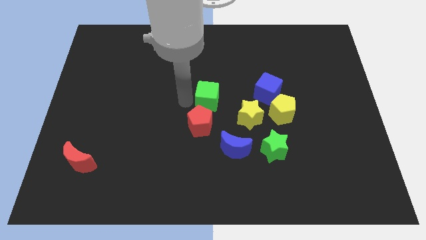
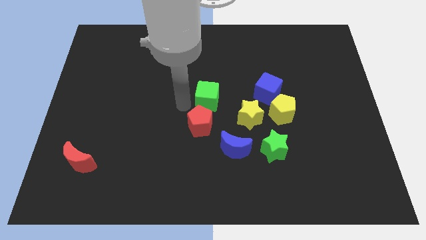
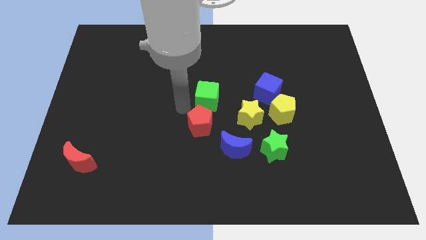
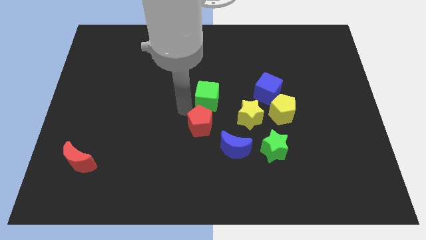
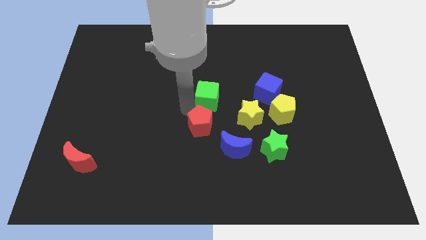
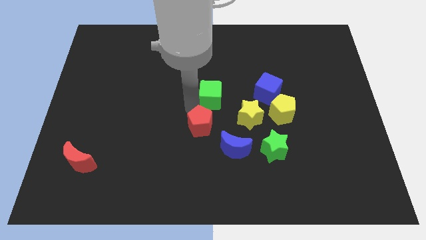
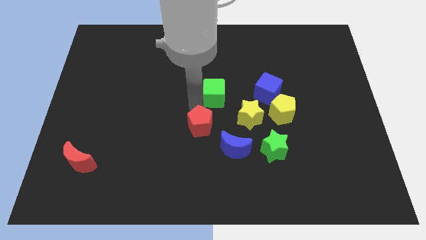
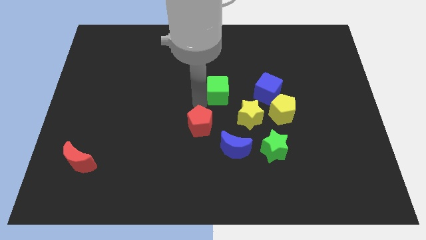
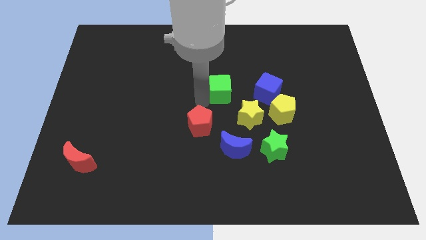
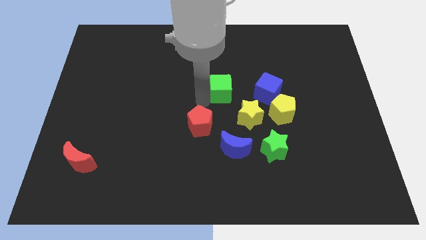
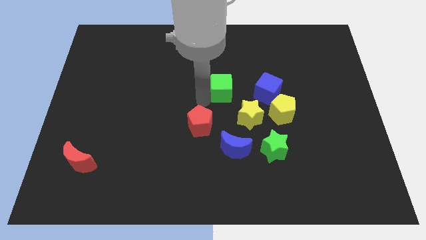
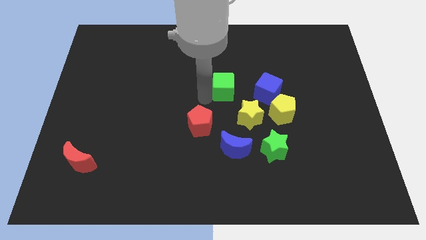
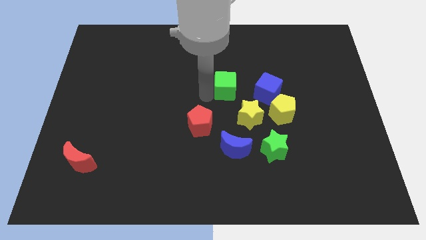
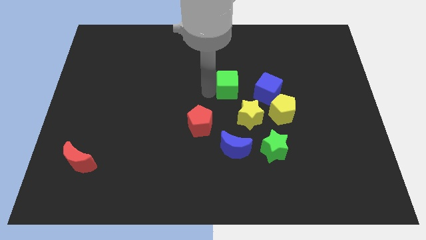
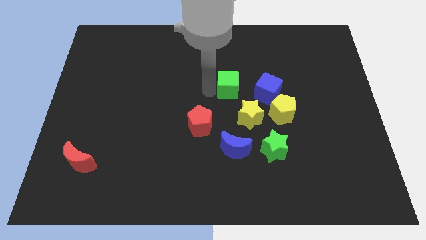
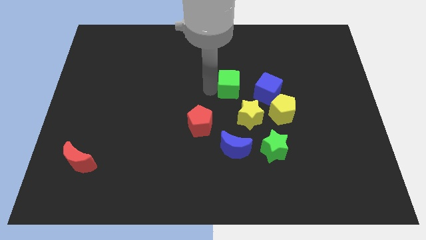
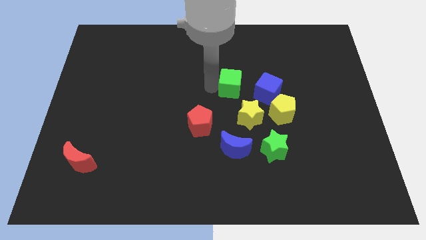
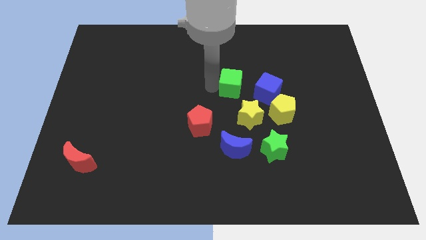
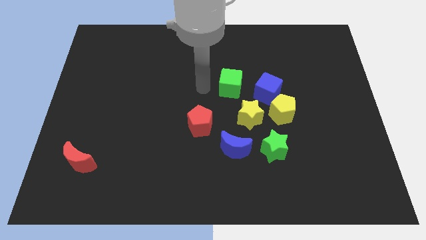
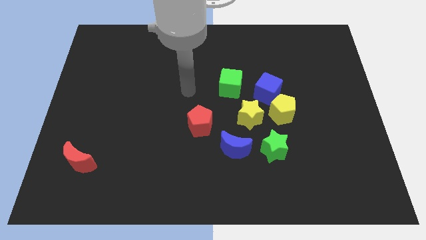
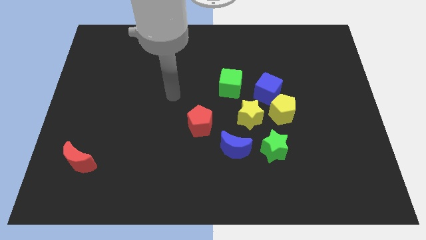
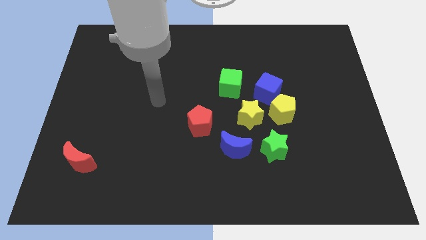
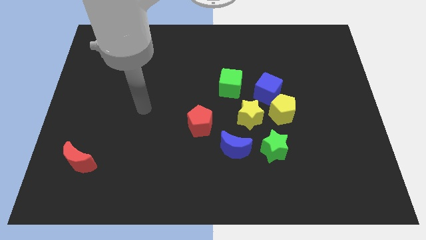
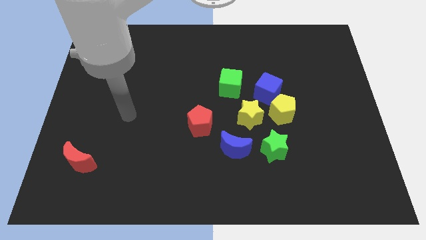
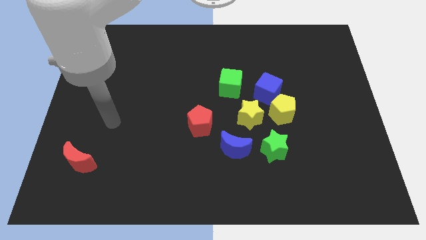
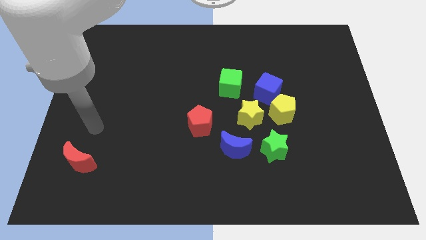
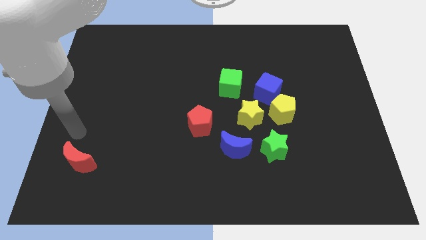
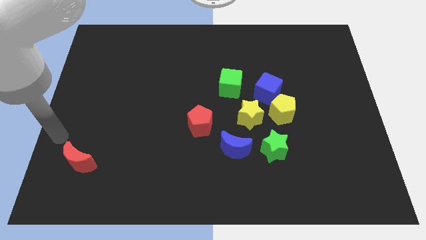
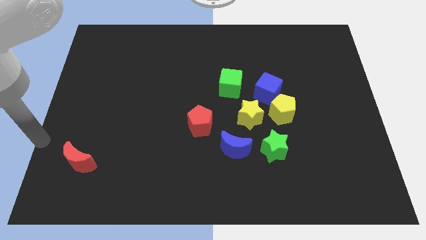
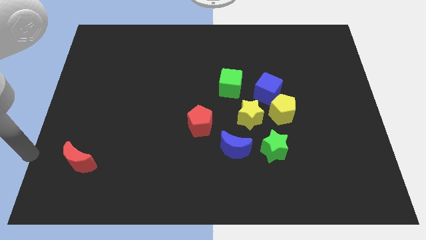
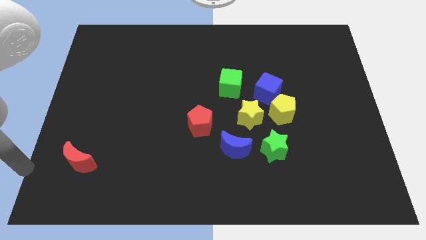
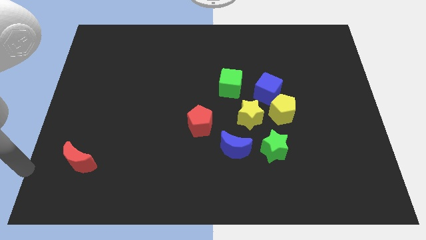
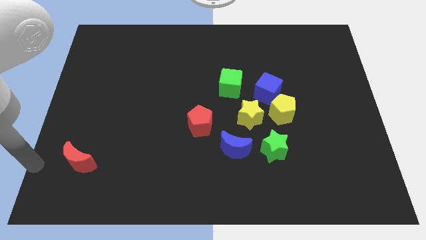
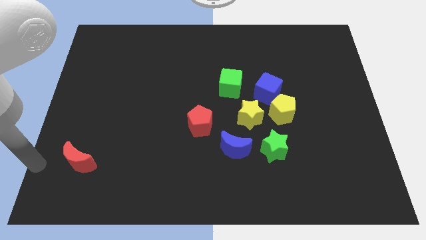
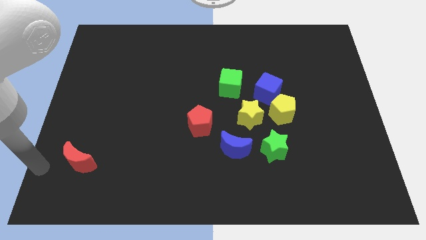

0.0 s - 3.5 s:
push green cube beside blue cube

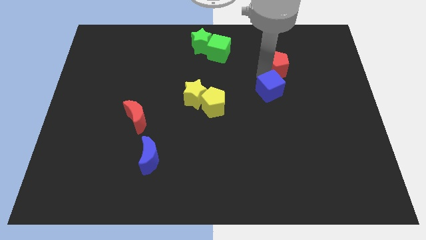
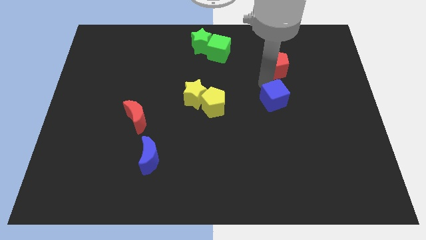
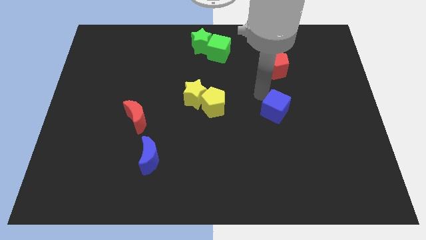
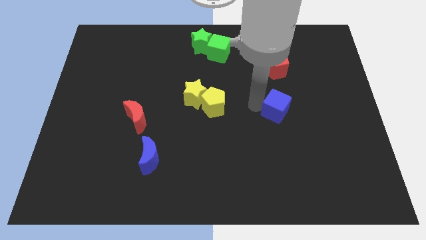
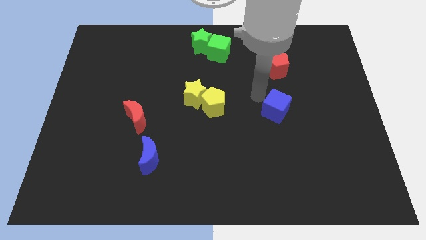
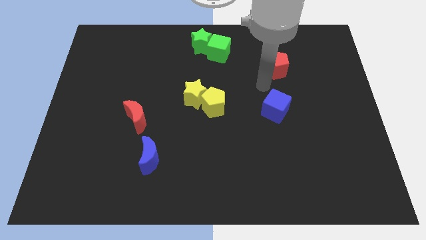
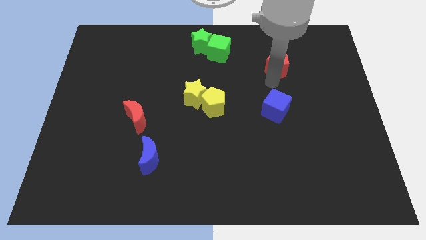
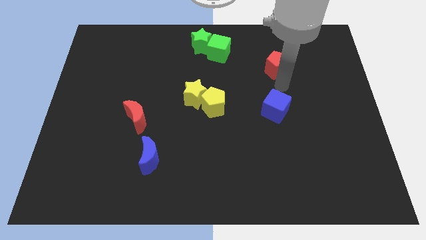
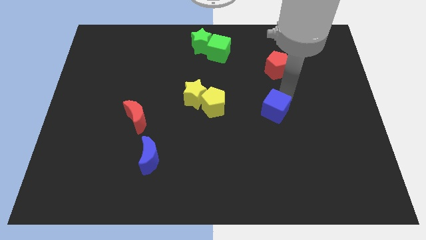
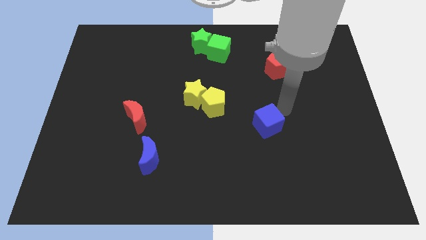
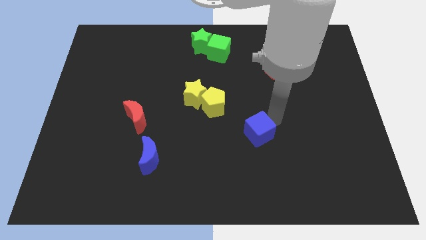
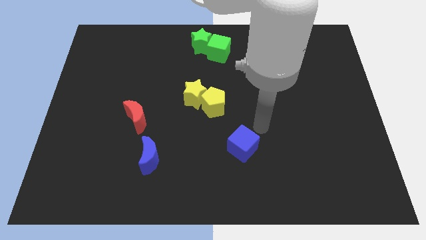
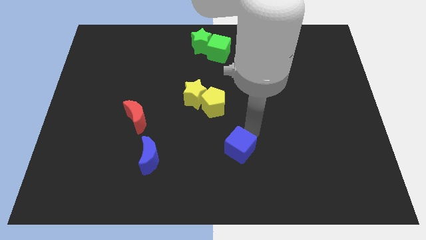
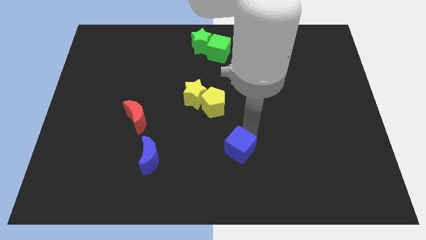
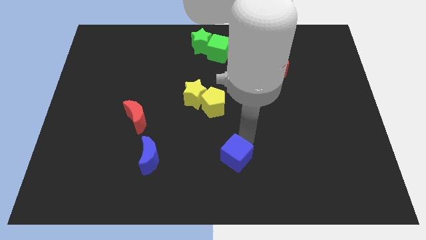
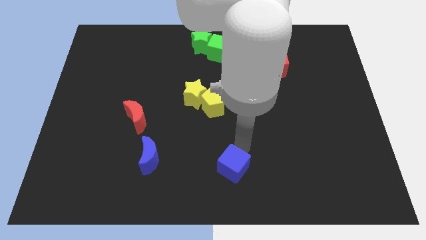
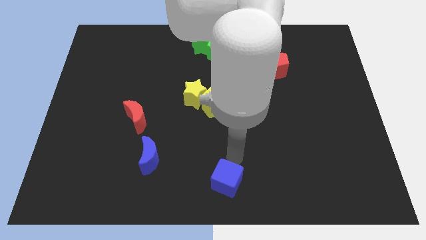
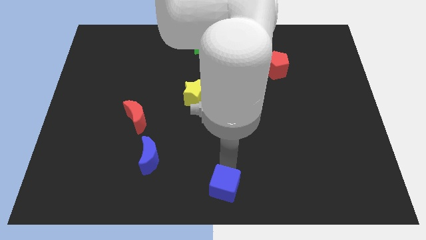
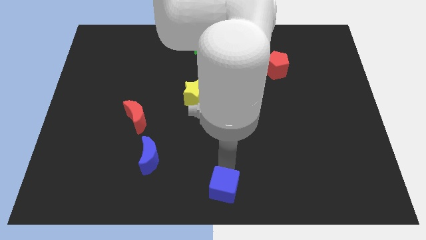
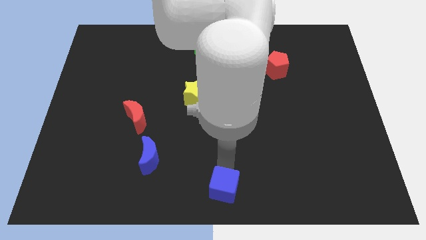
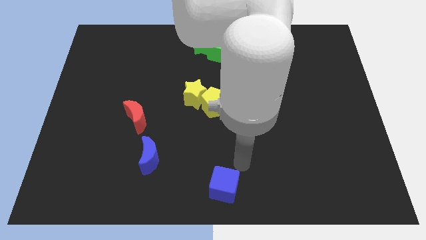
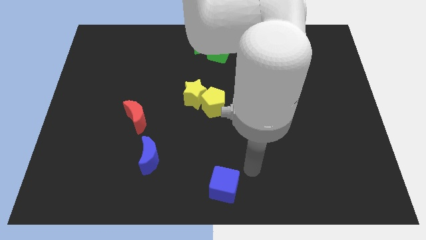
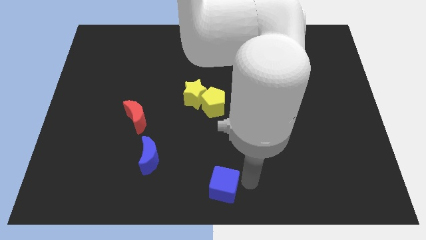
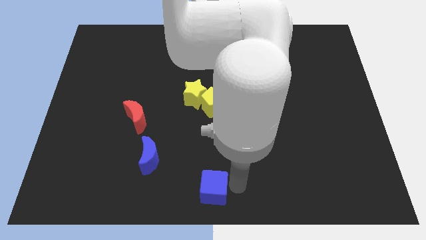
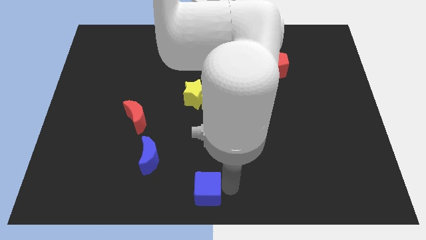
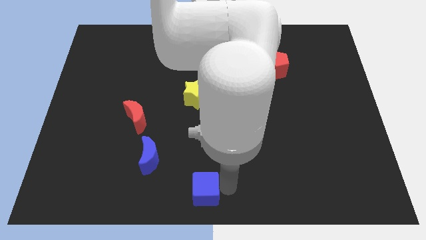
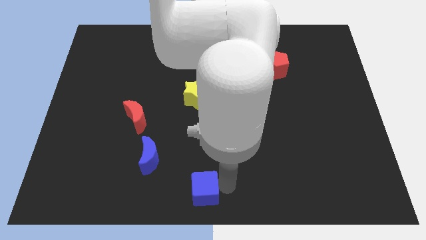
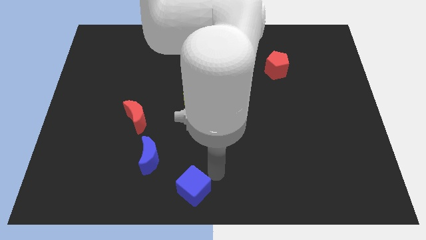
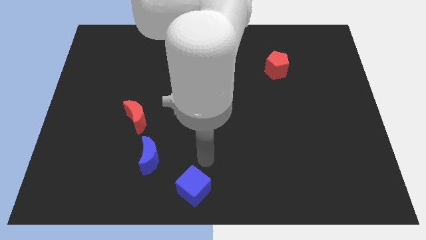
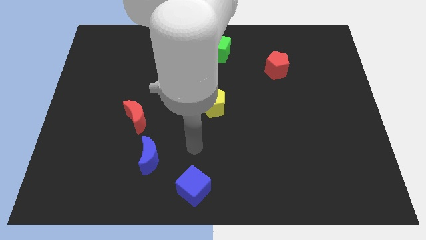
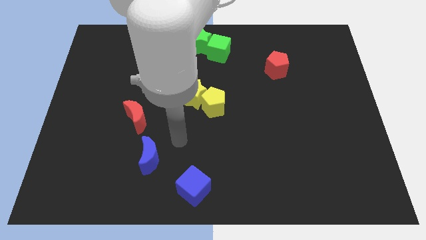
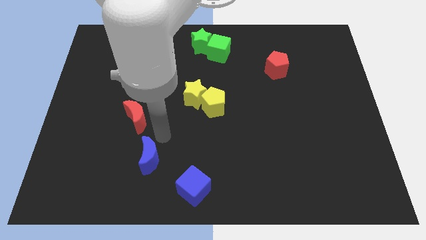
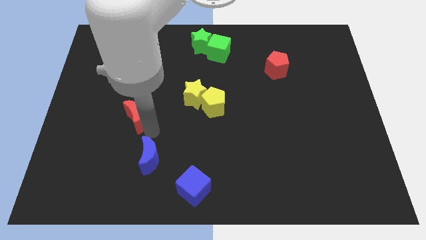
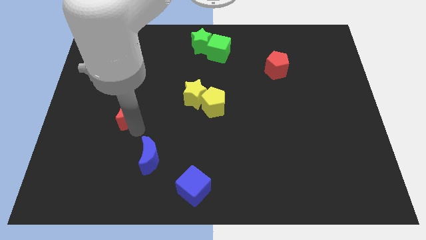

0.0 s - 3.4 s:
place the blue cube to the bottom center of the board

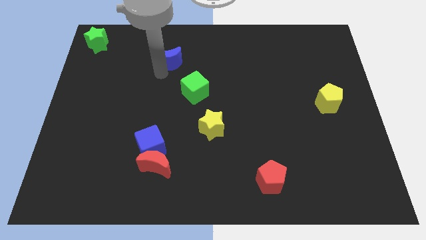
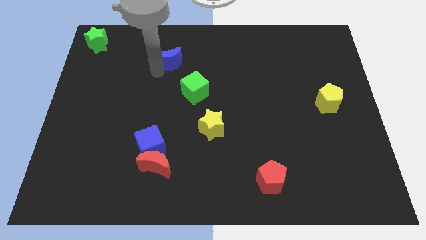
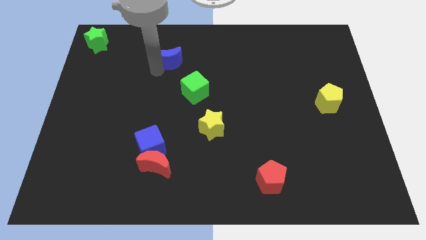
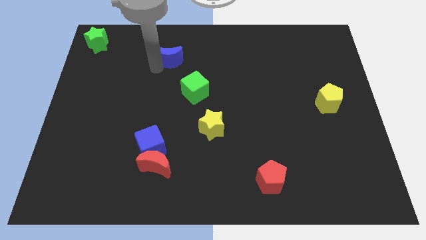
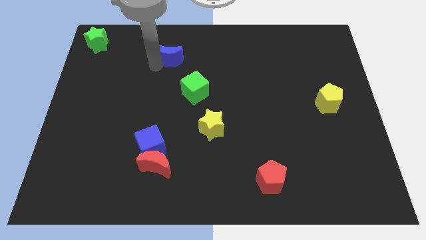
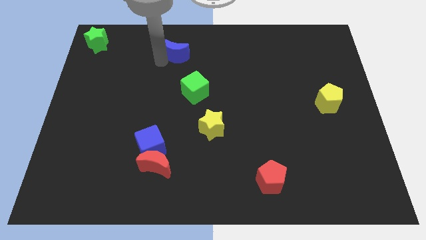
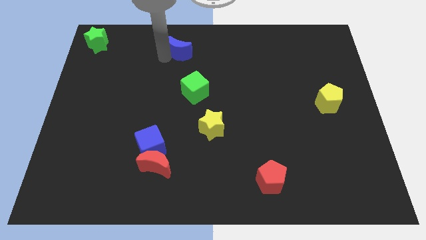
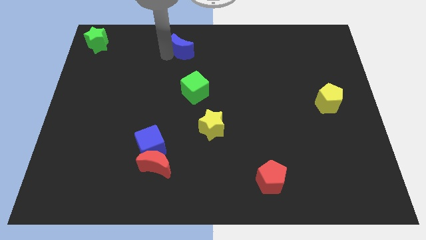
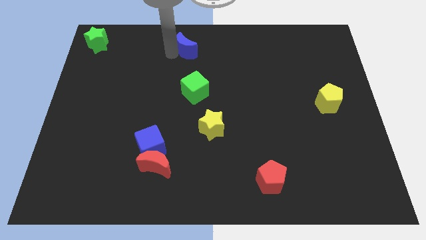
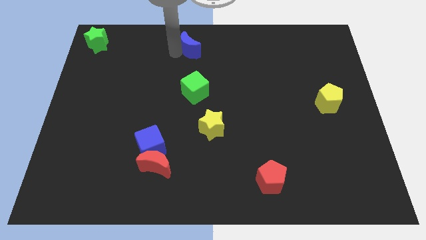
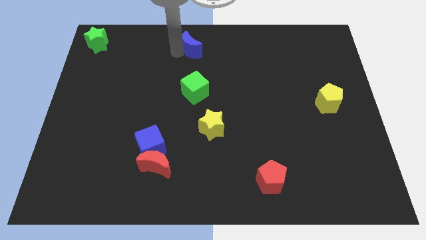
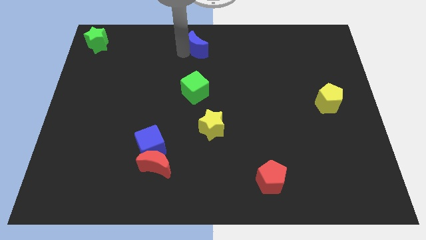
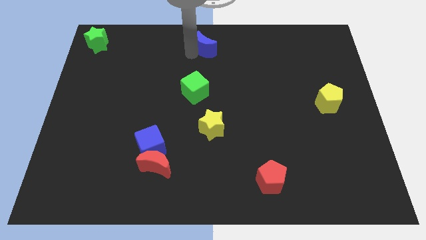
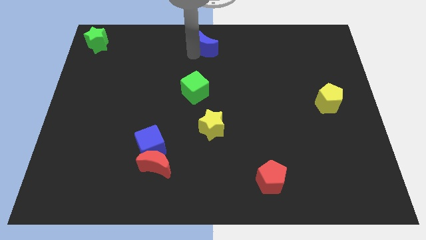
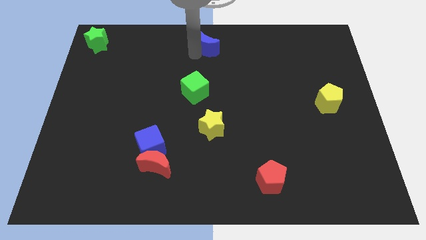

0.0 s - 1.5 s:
push the blue moon above the green cube

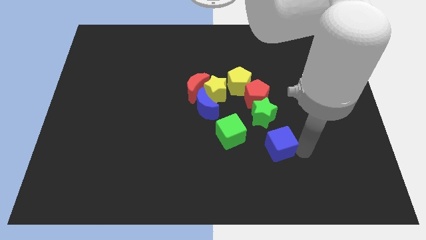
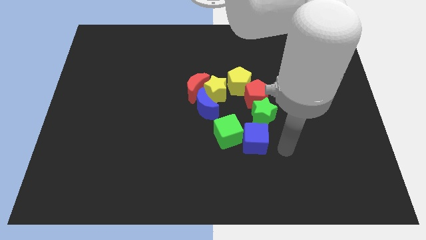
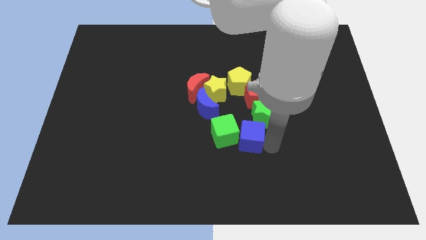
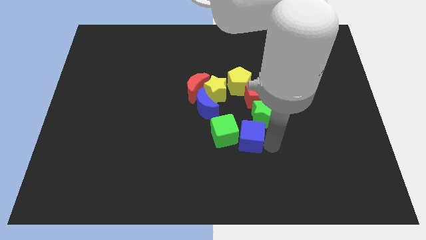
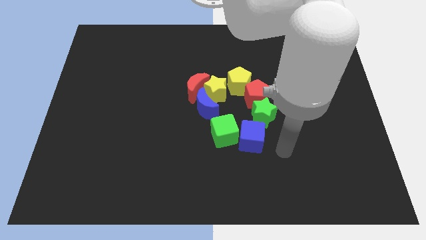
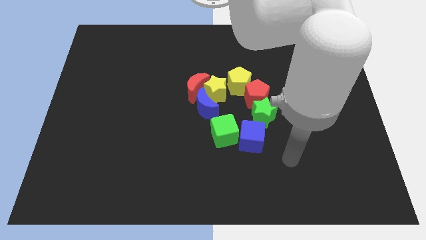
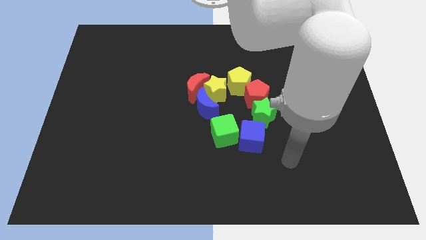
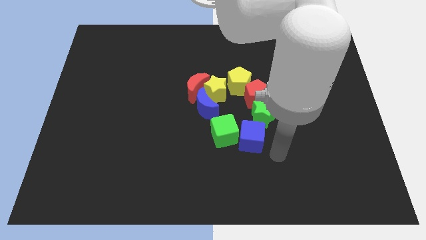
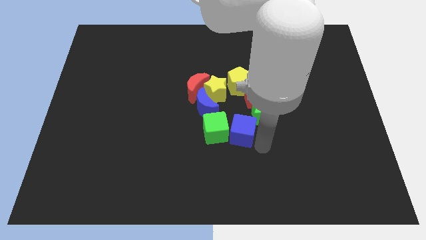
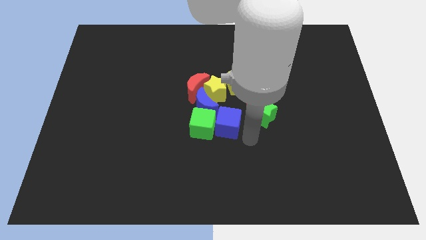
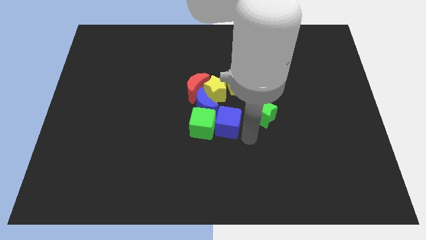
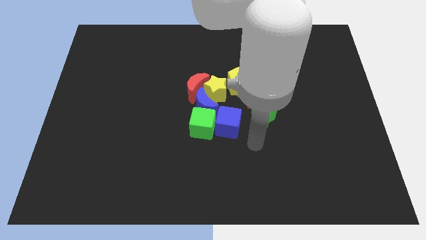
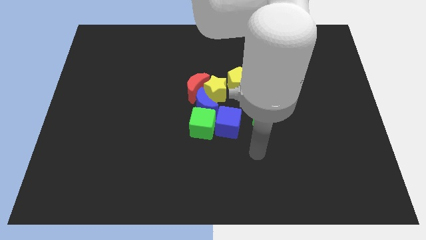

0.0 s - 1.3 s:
place the blue cube between the green blocks
